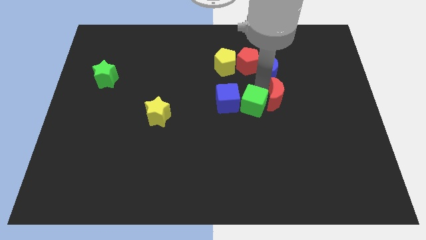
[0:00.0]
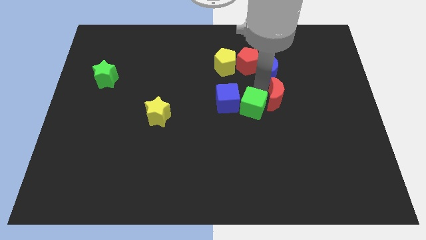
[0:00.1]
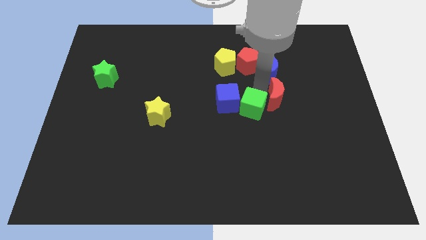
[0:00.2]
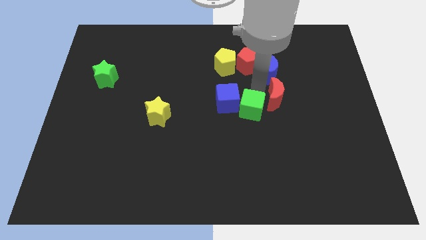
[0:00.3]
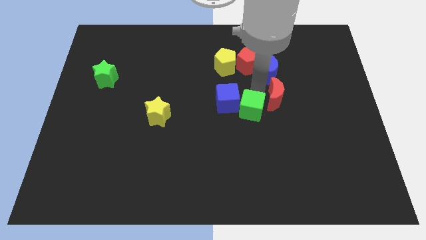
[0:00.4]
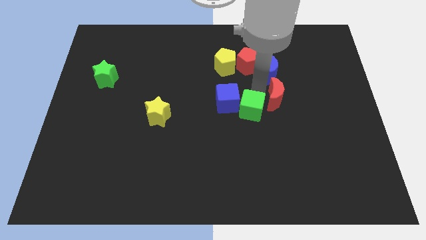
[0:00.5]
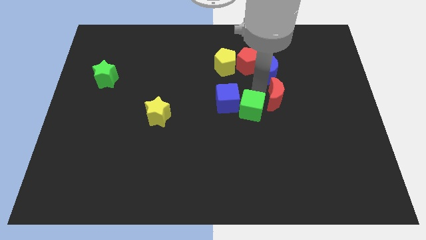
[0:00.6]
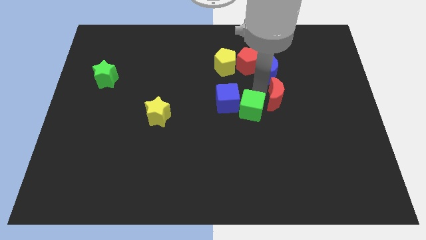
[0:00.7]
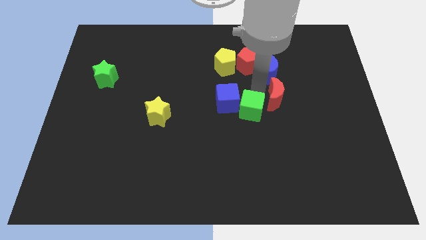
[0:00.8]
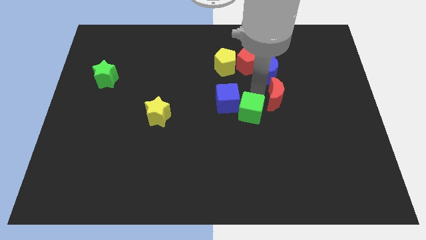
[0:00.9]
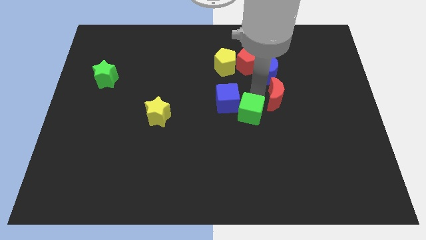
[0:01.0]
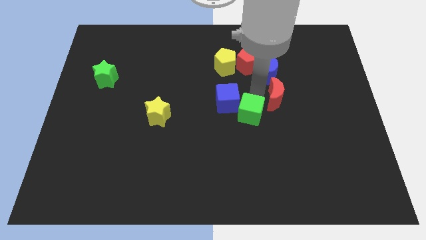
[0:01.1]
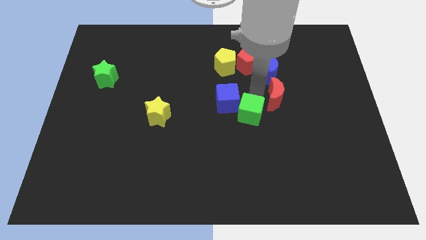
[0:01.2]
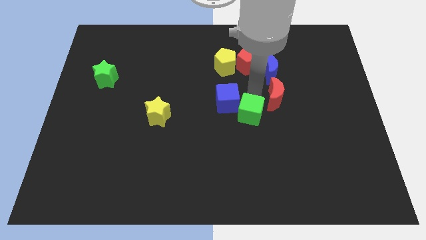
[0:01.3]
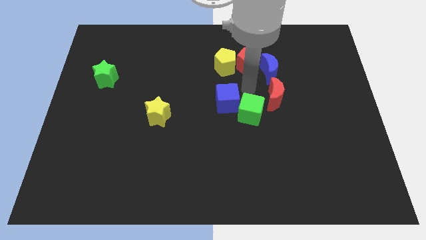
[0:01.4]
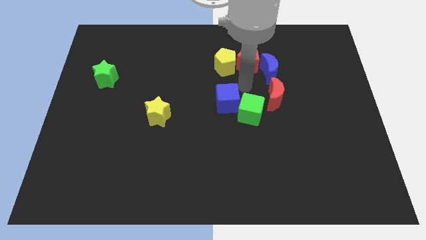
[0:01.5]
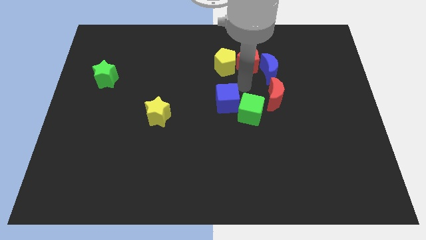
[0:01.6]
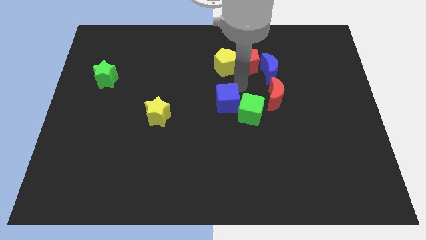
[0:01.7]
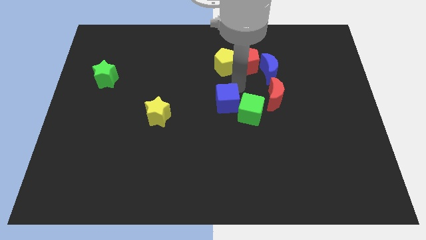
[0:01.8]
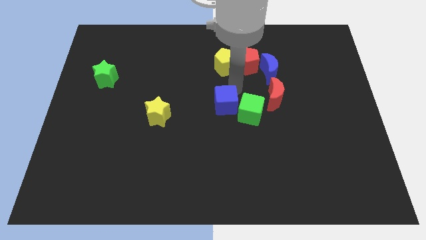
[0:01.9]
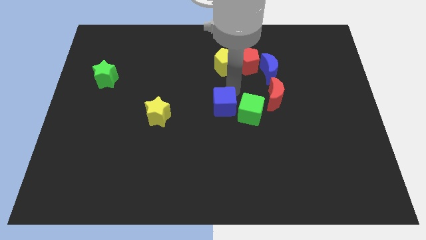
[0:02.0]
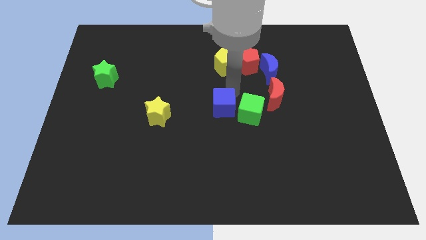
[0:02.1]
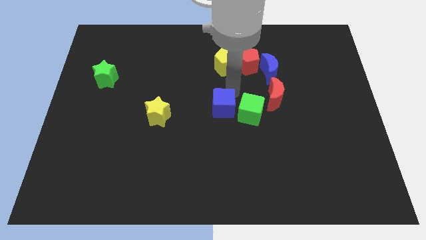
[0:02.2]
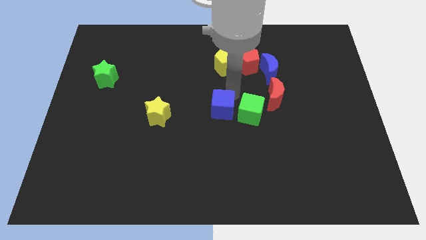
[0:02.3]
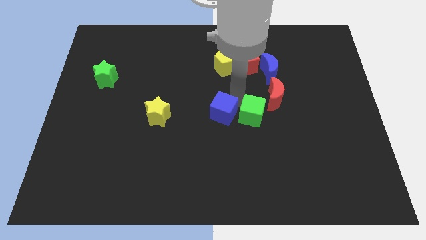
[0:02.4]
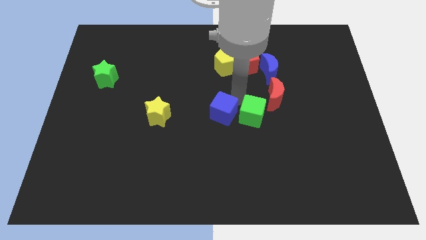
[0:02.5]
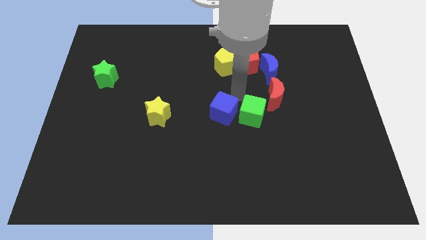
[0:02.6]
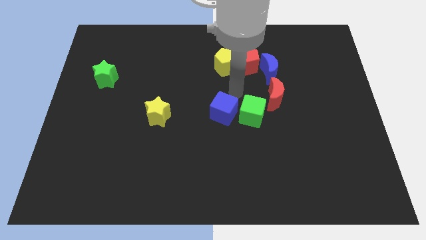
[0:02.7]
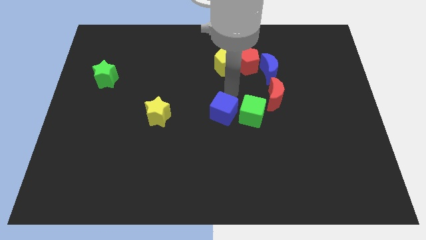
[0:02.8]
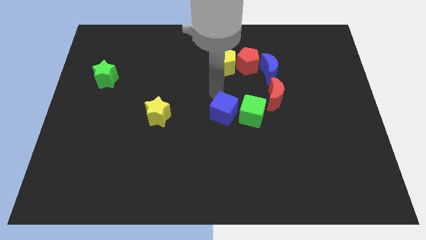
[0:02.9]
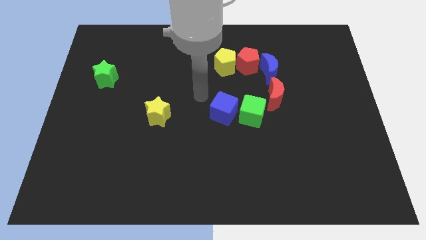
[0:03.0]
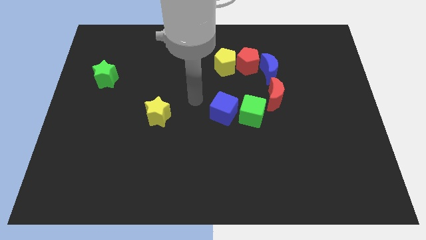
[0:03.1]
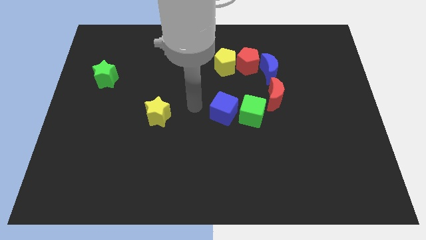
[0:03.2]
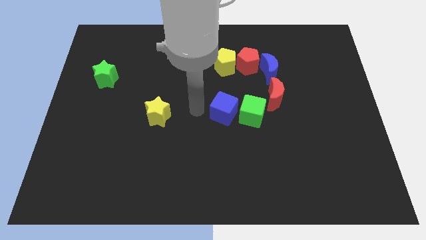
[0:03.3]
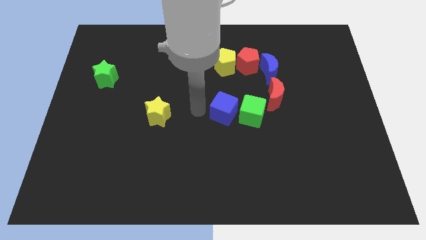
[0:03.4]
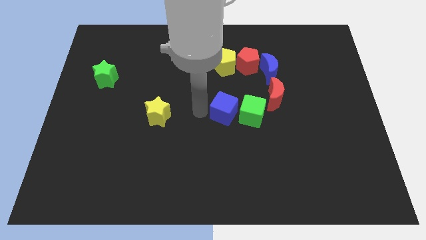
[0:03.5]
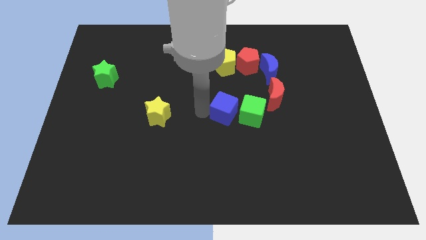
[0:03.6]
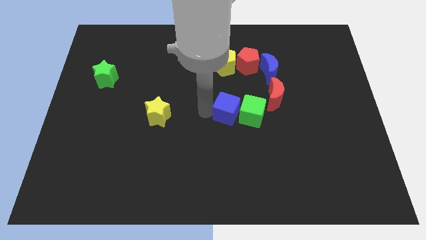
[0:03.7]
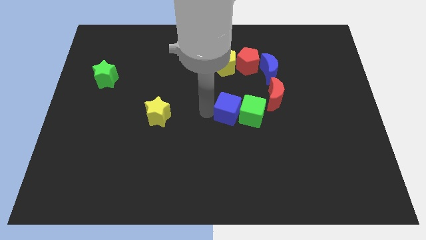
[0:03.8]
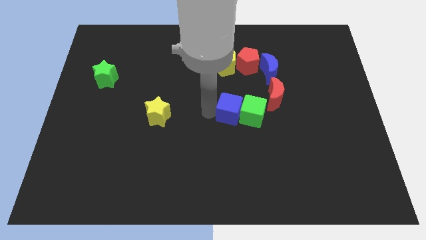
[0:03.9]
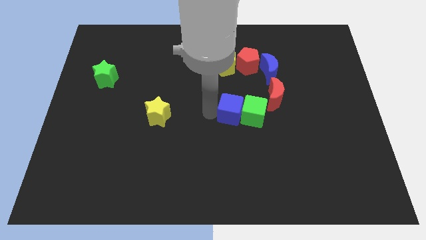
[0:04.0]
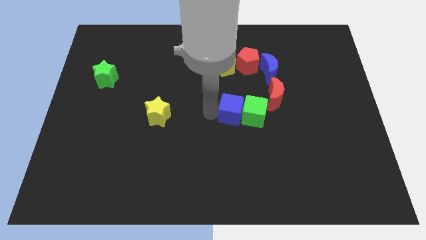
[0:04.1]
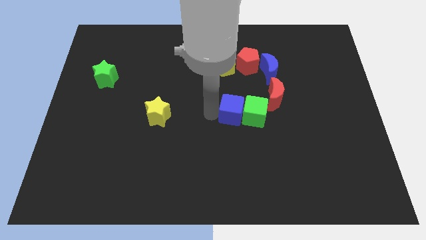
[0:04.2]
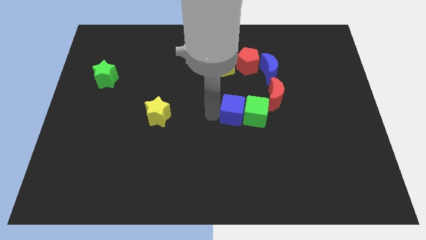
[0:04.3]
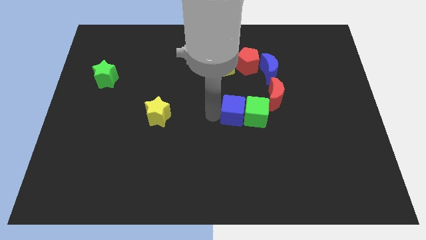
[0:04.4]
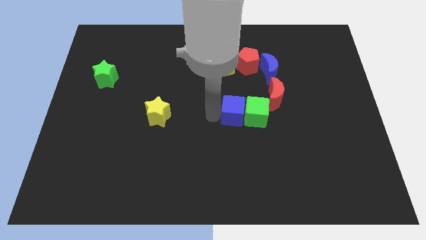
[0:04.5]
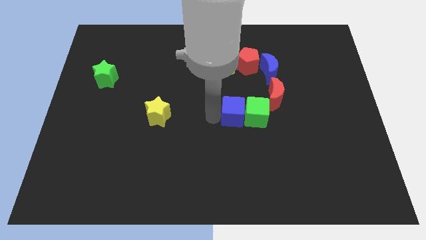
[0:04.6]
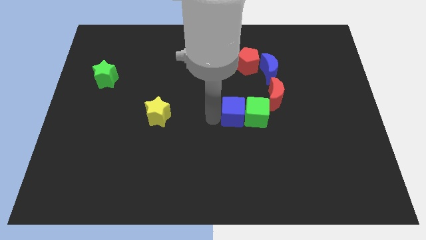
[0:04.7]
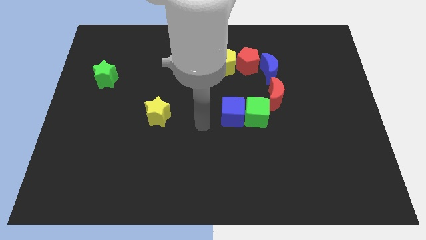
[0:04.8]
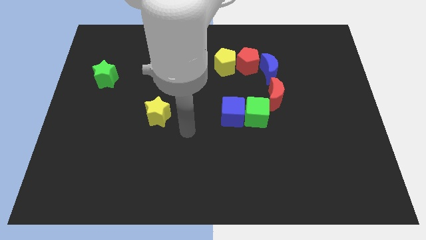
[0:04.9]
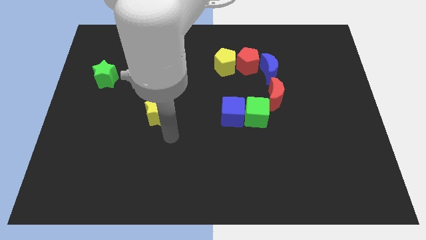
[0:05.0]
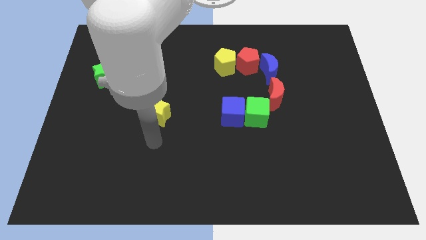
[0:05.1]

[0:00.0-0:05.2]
place the green and blue cubes together

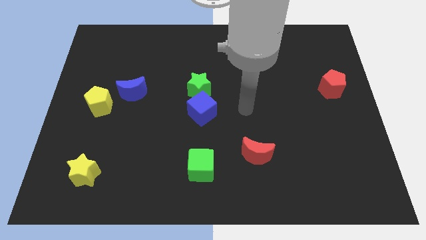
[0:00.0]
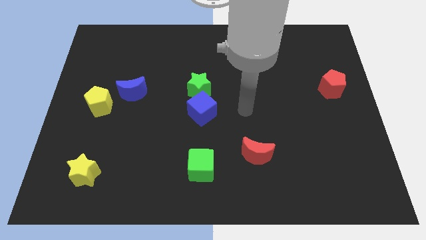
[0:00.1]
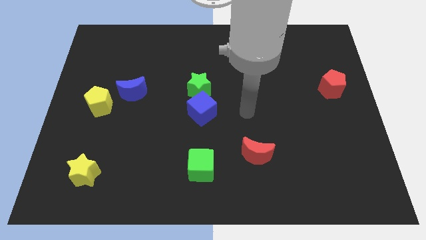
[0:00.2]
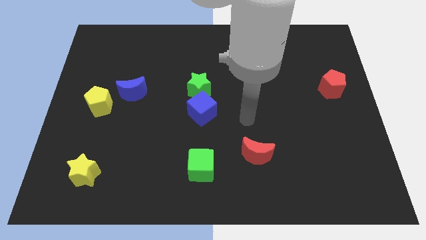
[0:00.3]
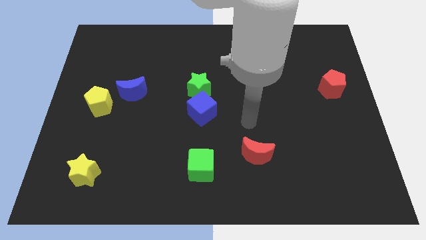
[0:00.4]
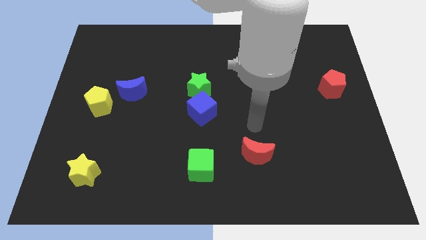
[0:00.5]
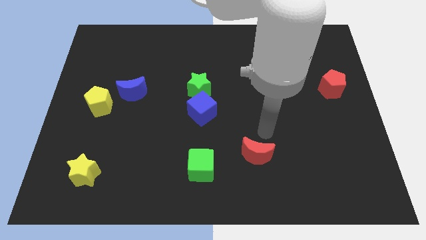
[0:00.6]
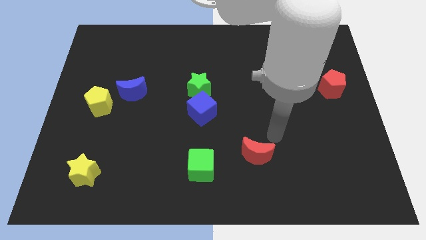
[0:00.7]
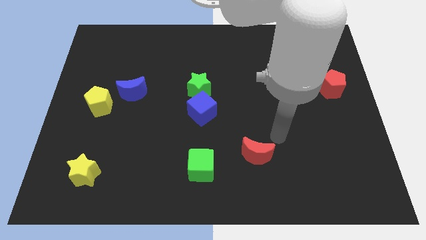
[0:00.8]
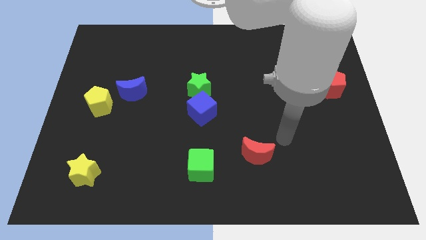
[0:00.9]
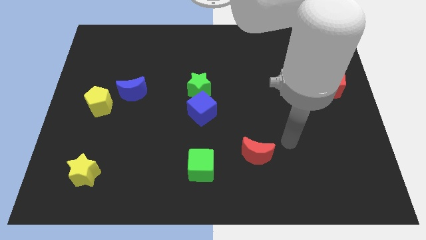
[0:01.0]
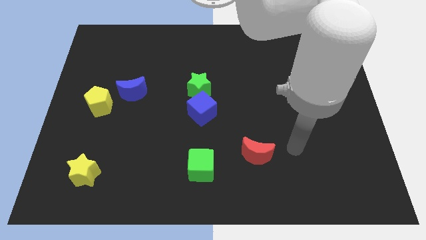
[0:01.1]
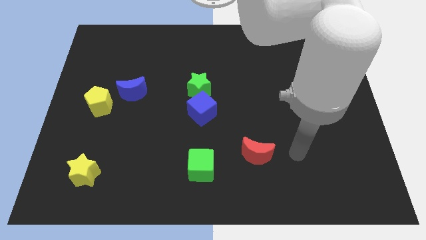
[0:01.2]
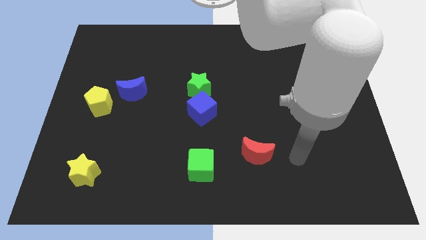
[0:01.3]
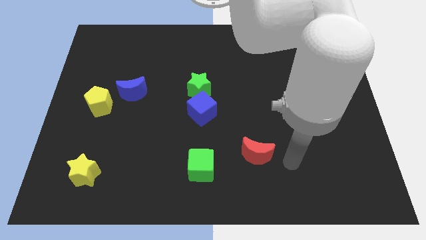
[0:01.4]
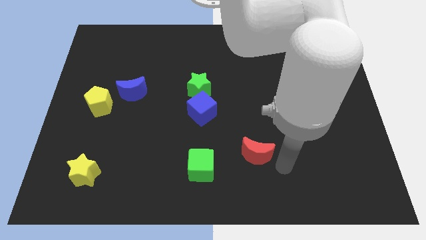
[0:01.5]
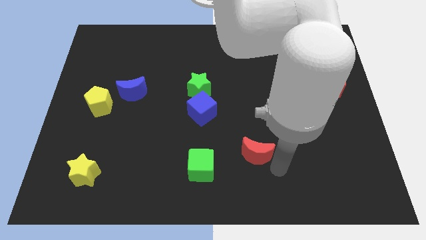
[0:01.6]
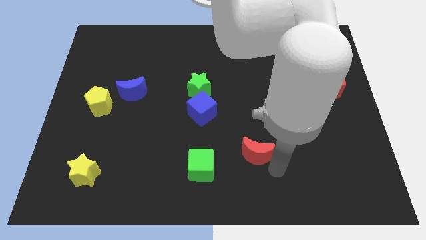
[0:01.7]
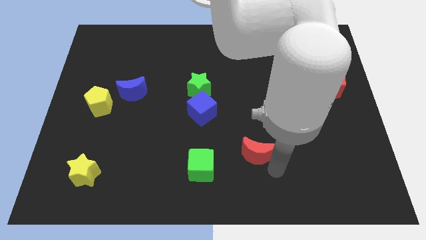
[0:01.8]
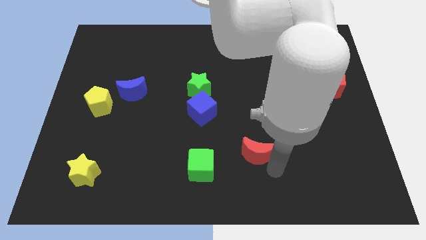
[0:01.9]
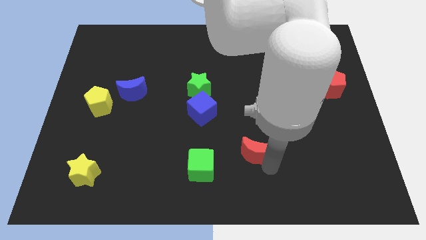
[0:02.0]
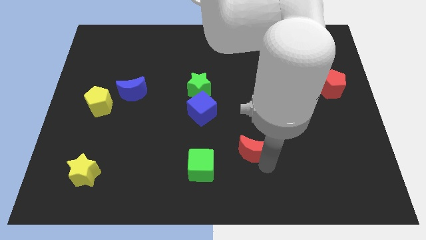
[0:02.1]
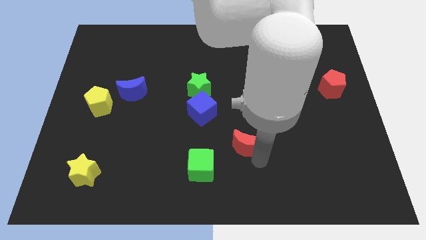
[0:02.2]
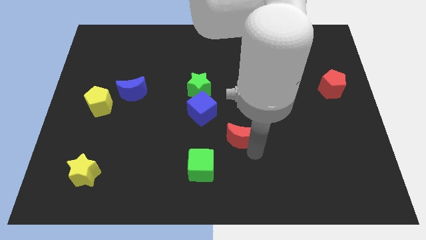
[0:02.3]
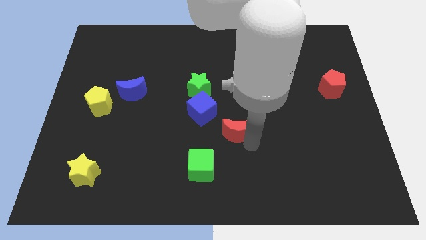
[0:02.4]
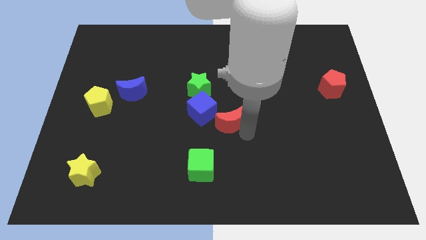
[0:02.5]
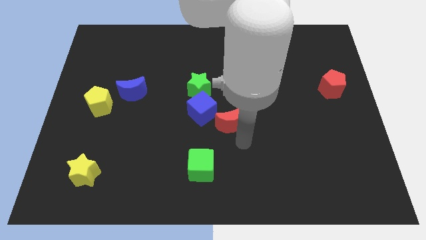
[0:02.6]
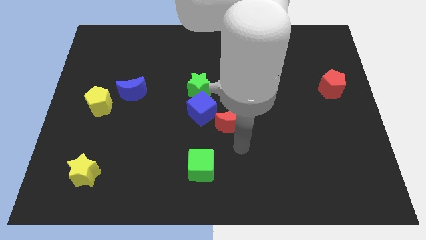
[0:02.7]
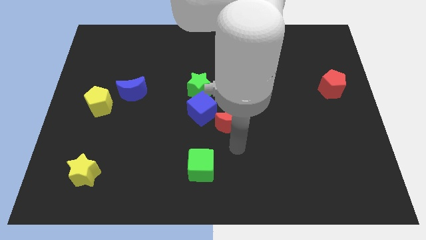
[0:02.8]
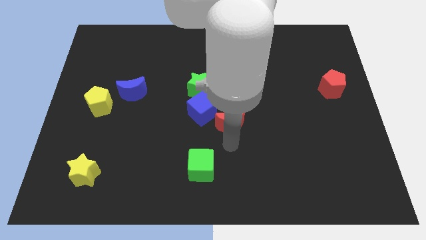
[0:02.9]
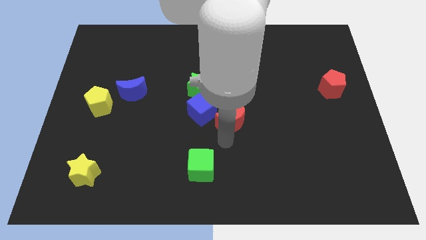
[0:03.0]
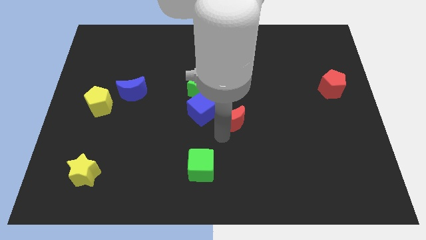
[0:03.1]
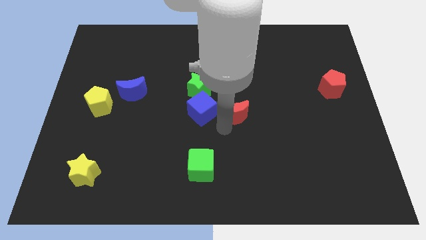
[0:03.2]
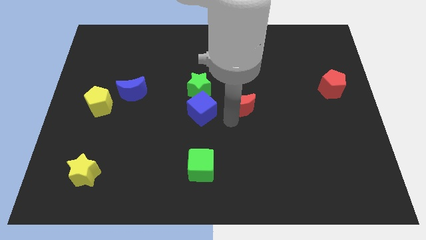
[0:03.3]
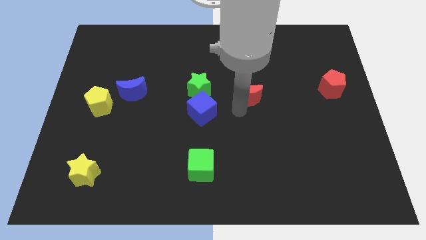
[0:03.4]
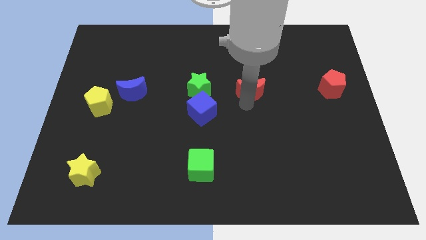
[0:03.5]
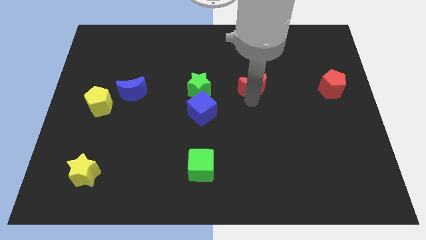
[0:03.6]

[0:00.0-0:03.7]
place red moon right to the green star

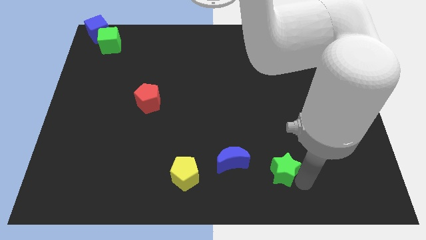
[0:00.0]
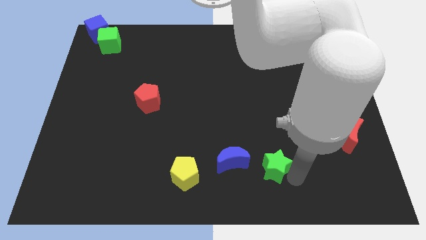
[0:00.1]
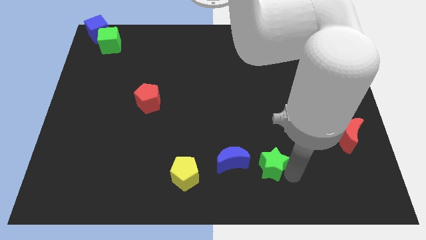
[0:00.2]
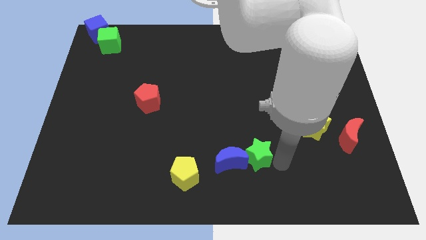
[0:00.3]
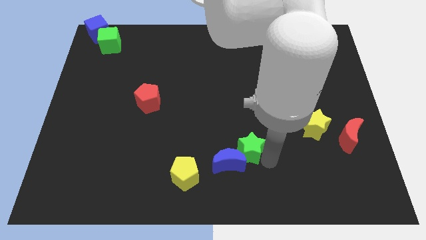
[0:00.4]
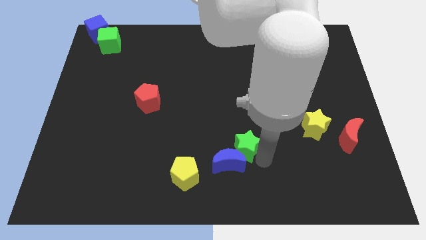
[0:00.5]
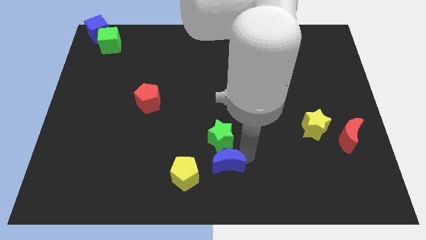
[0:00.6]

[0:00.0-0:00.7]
push the green star into the blue crescent
